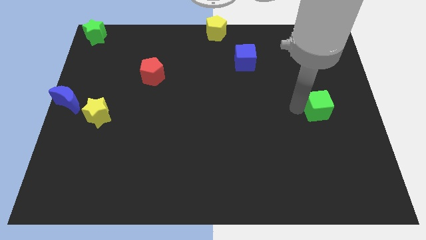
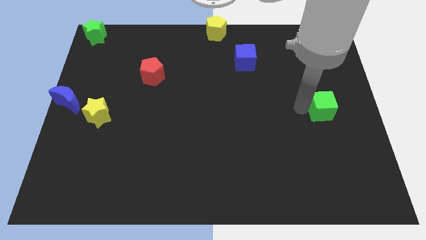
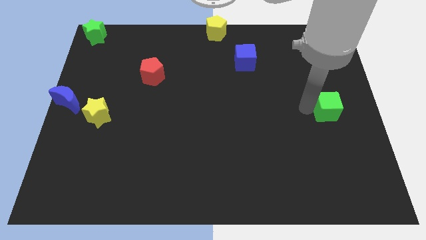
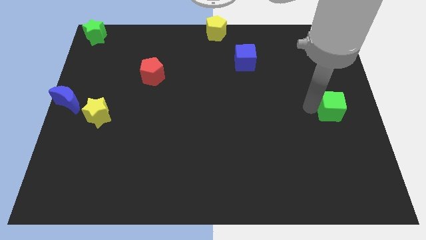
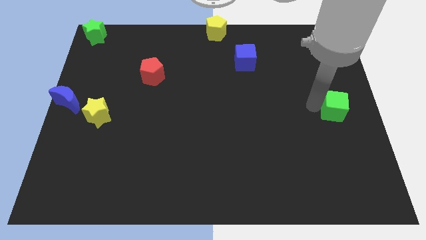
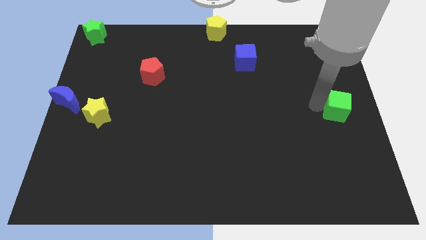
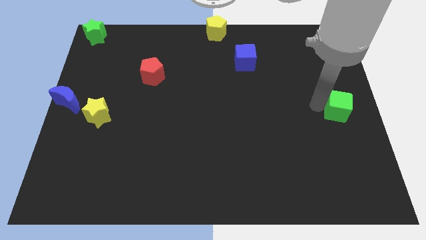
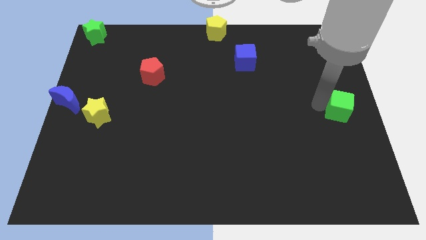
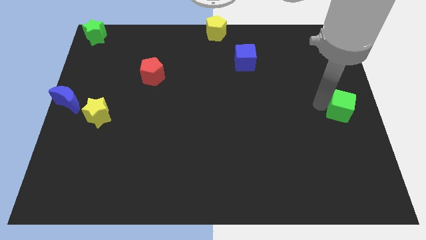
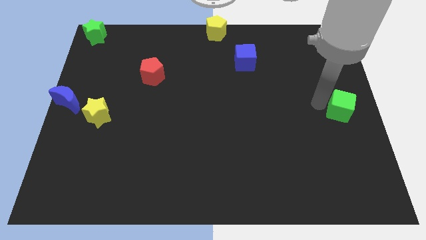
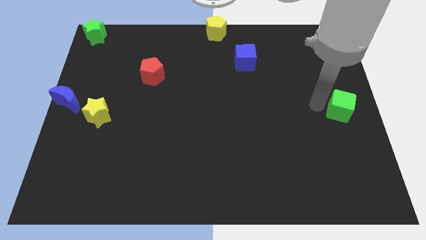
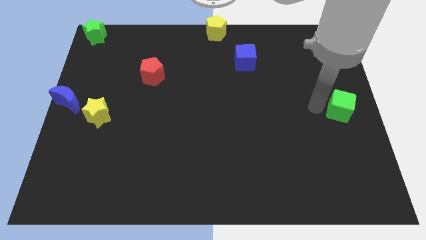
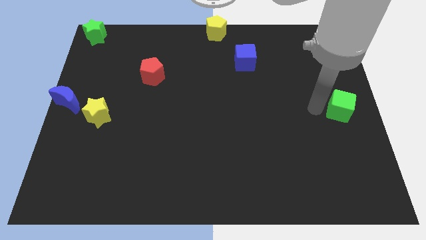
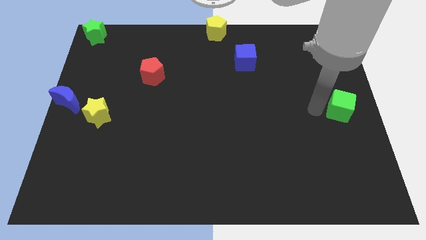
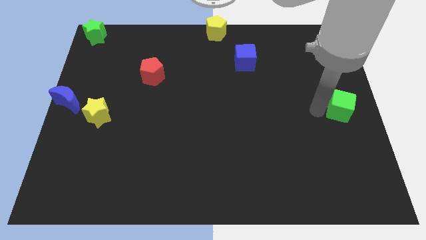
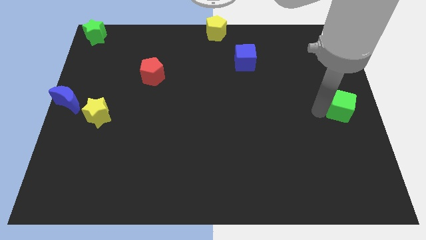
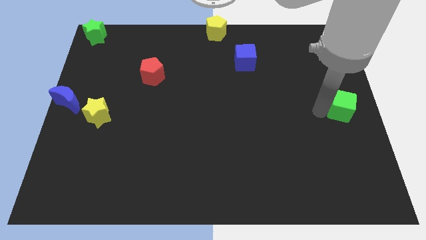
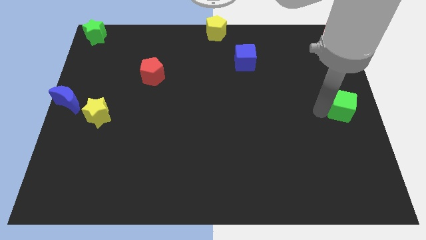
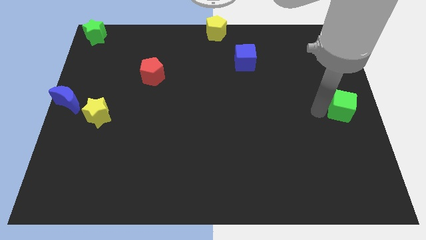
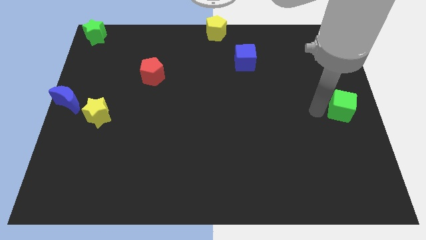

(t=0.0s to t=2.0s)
move the green cube to the right center of the board

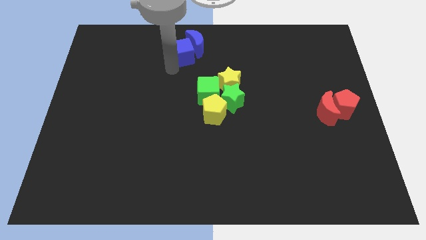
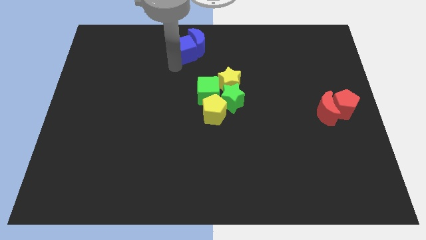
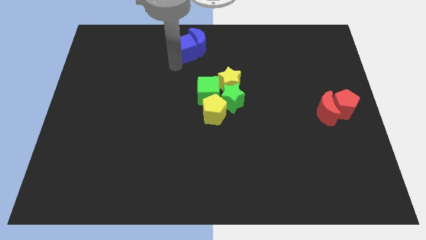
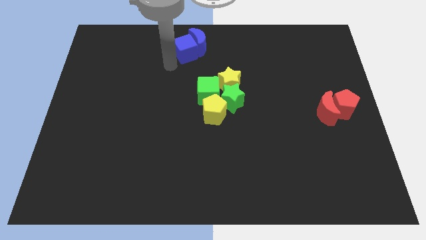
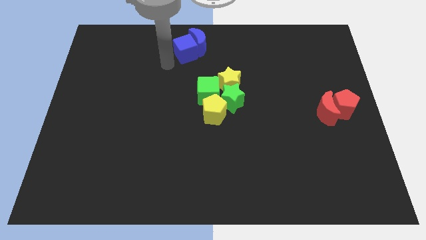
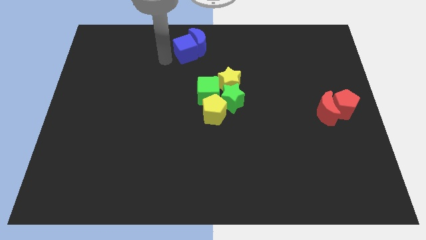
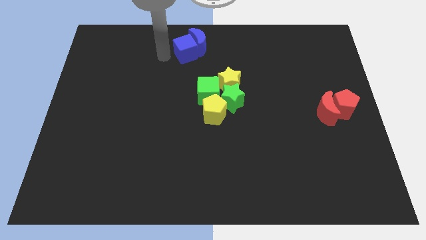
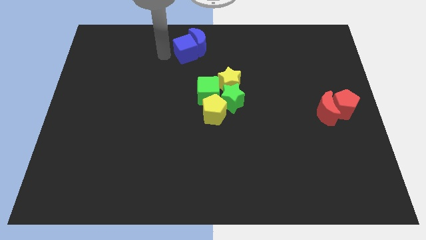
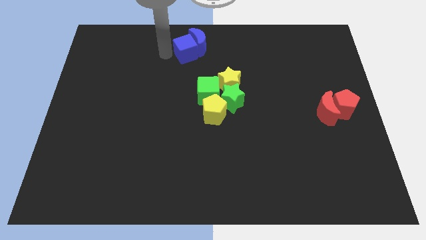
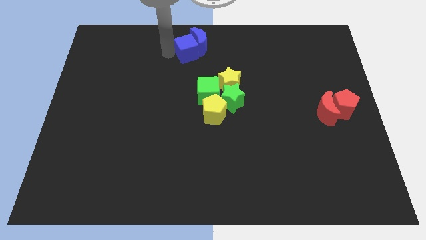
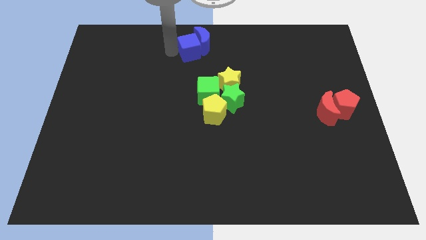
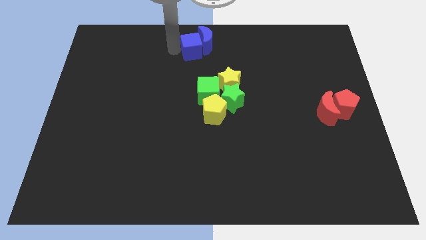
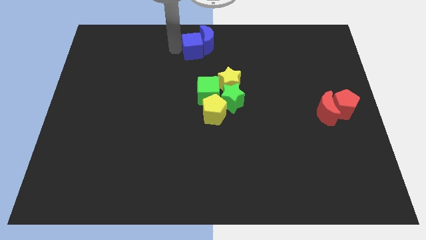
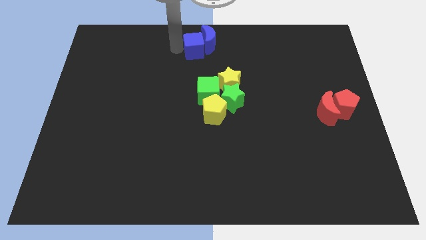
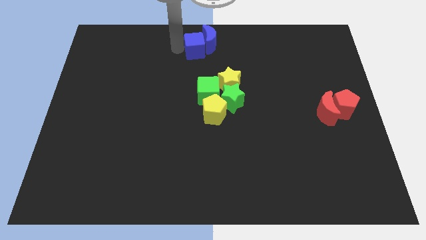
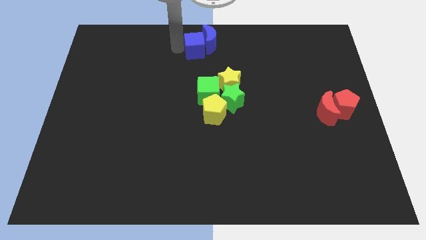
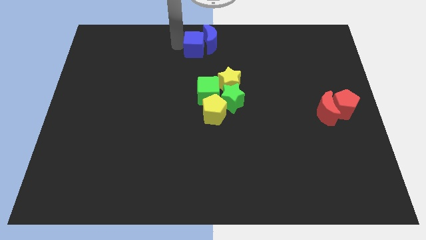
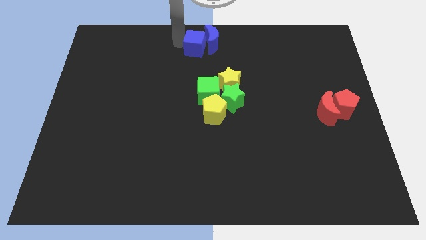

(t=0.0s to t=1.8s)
push the blue blocks together to the top center

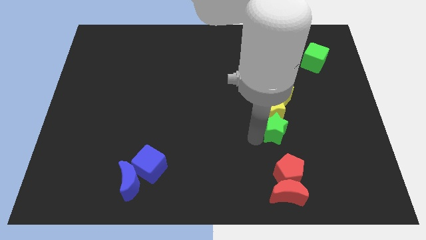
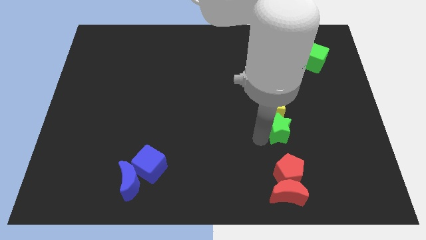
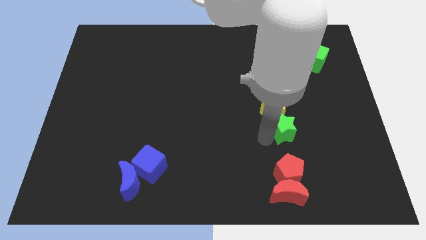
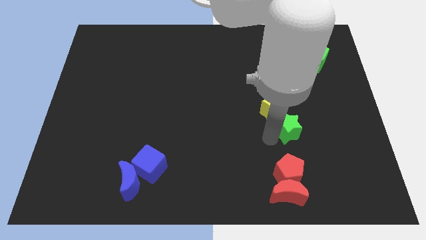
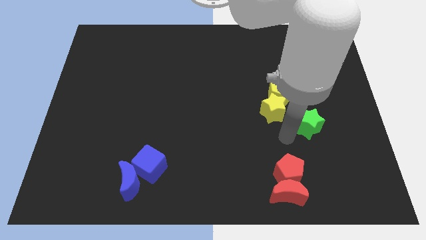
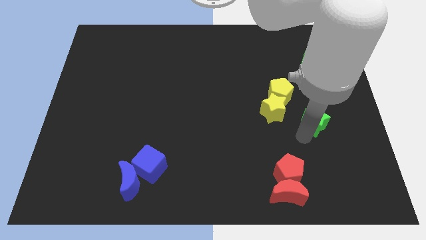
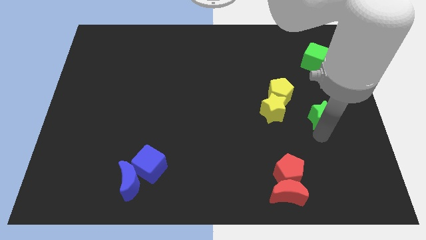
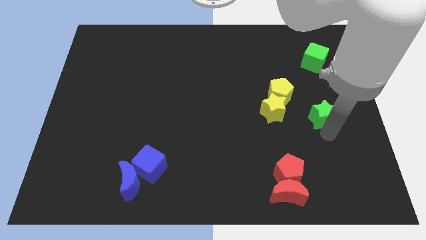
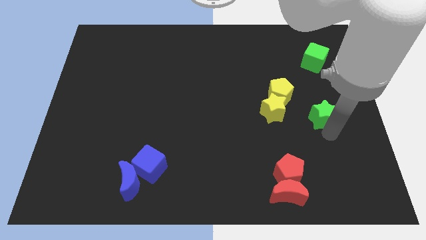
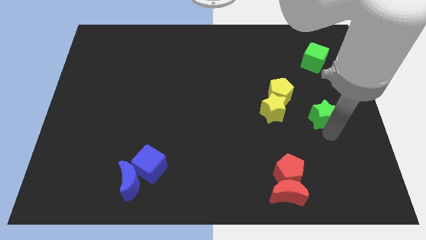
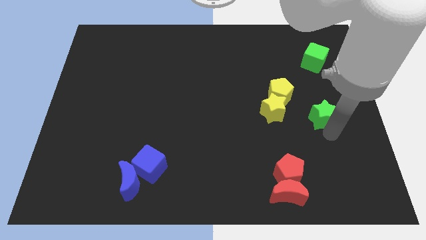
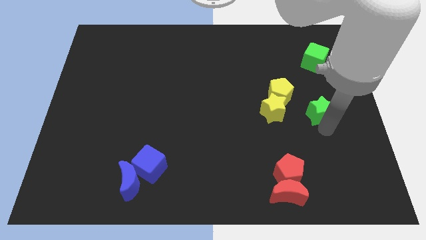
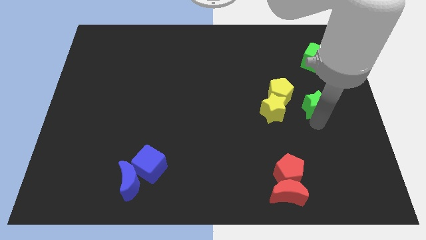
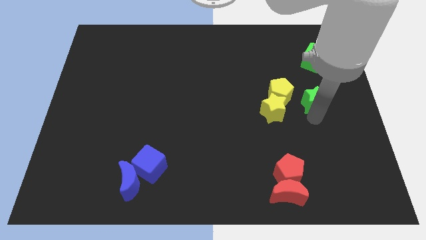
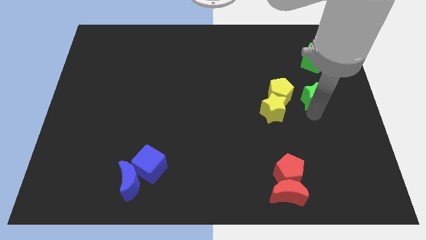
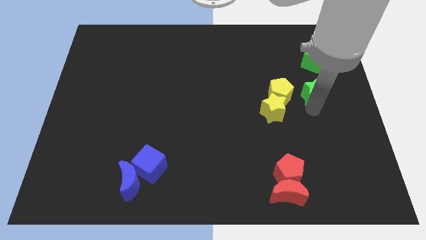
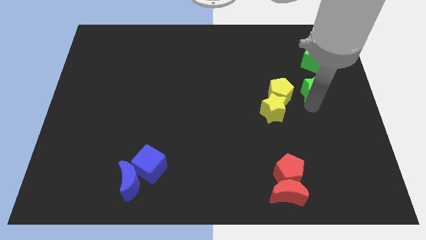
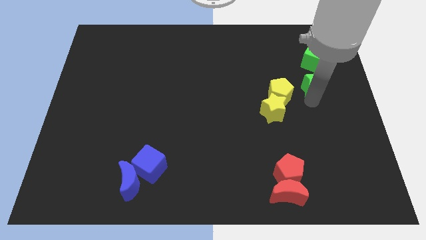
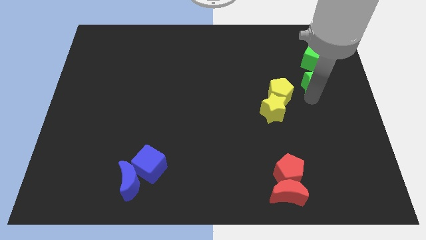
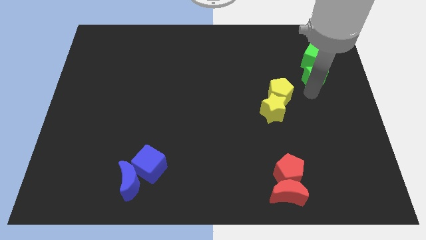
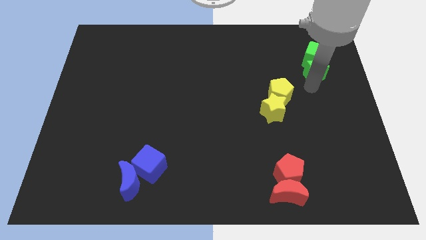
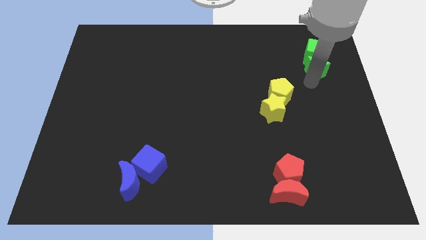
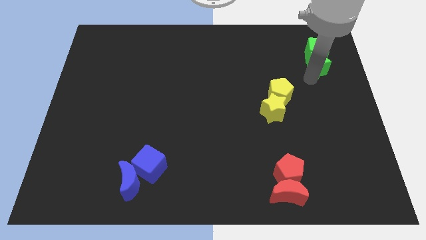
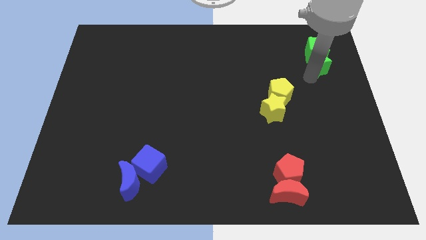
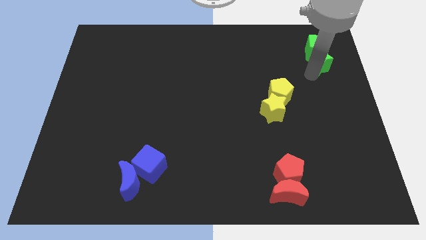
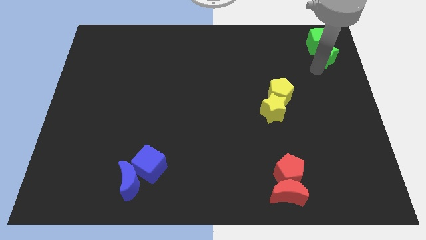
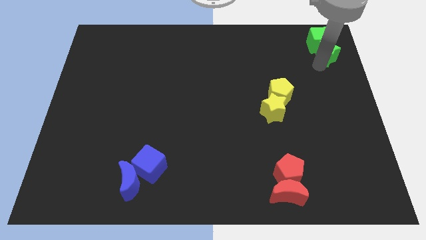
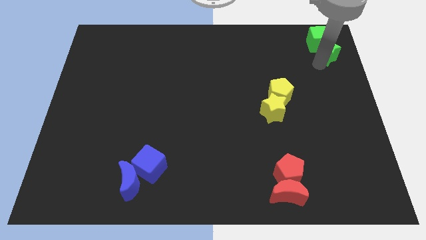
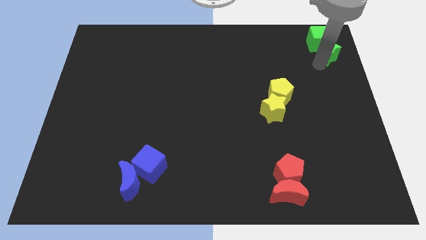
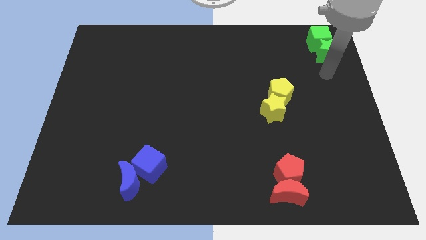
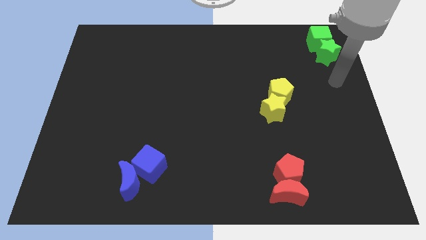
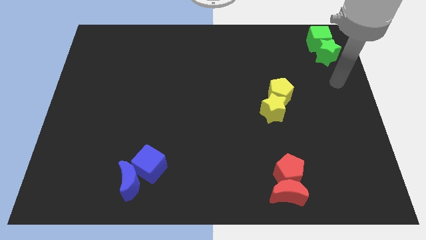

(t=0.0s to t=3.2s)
push the green star into the green cube

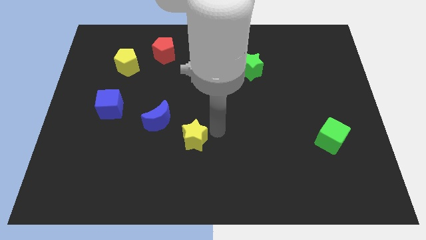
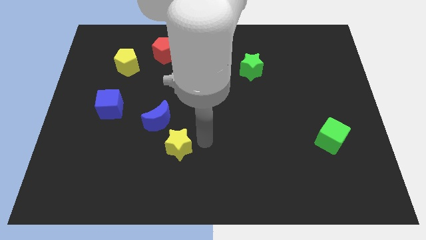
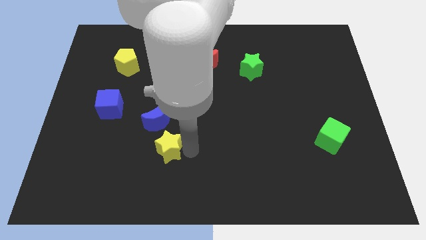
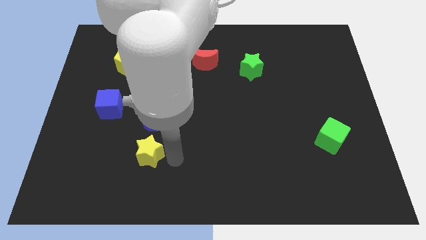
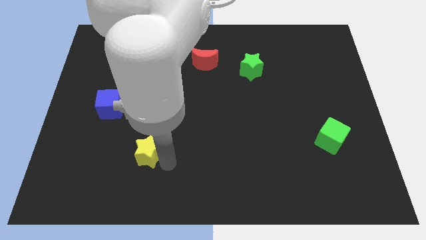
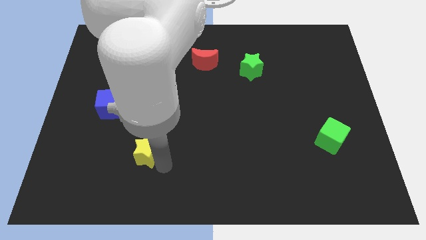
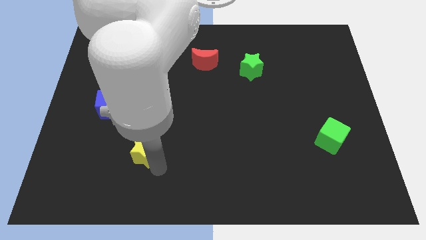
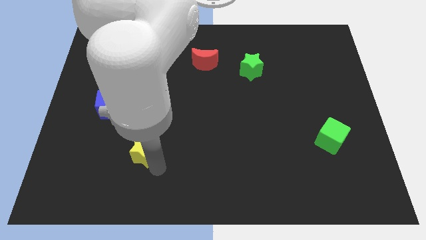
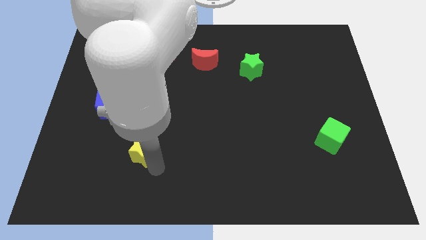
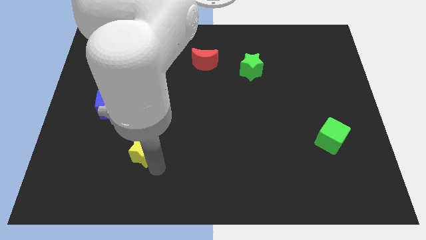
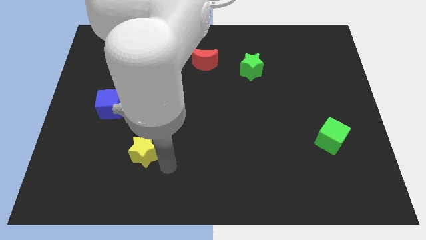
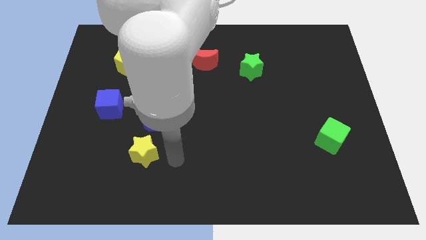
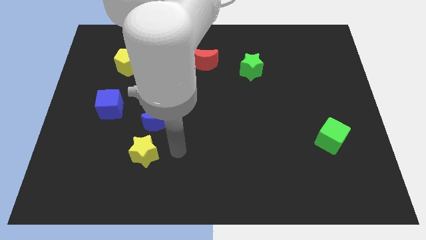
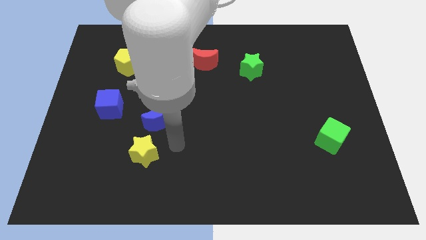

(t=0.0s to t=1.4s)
put the yellow star underneath the blue crescent

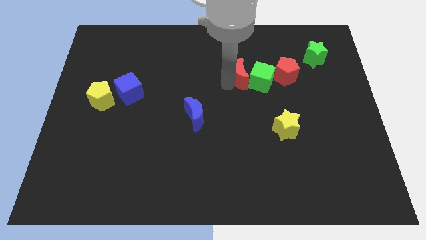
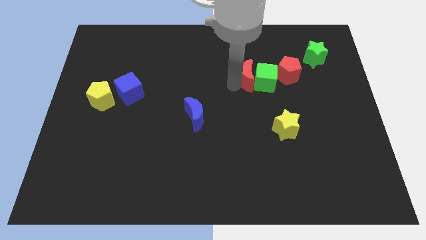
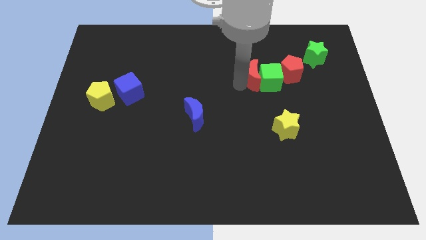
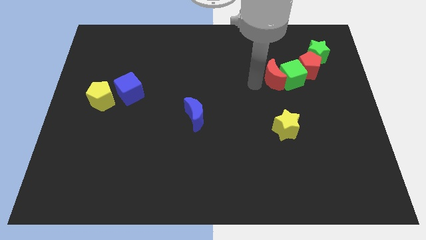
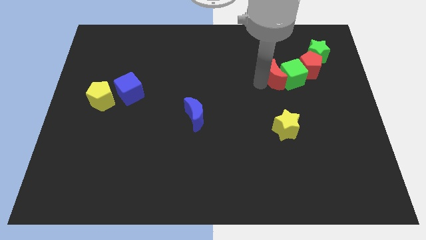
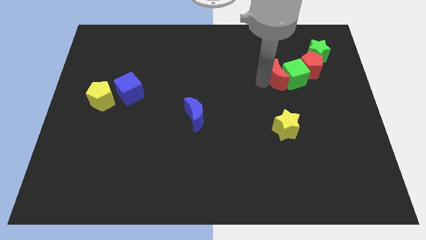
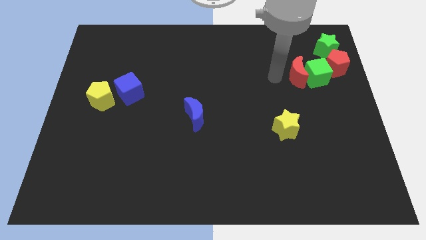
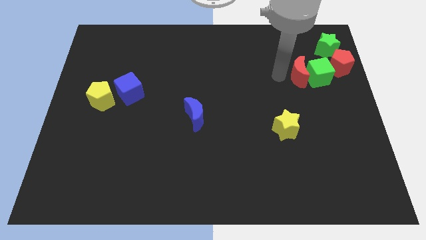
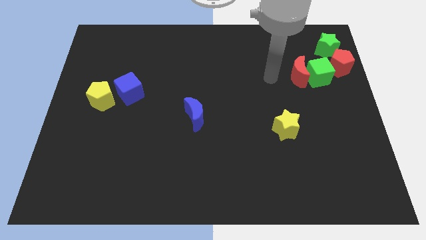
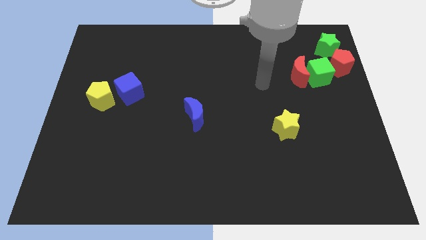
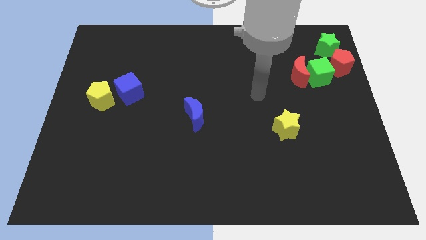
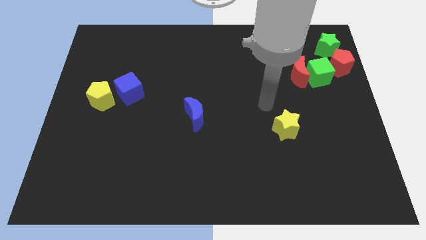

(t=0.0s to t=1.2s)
move the red crescent to the top right corner along with the green stargreen cube and red pentagon
